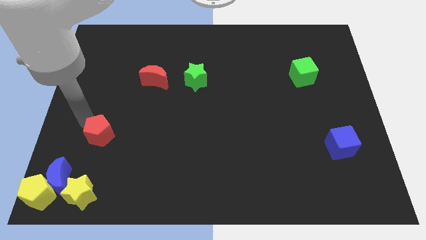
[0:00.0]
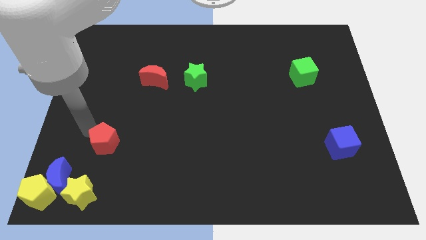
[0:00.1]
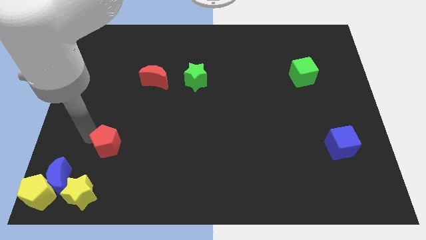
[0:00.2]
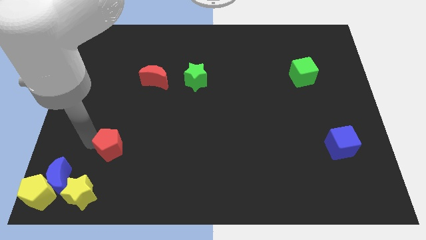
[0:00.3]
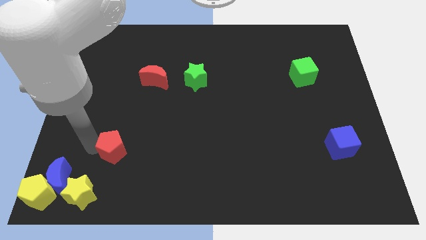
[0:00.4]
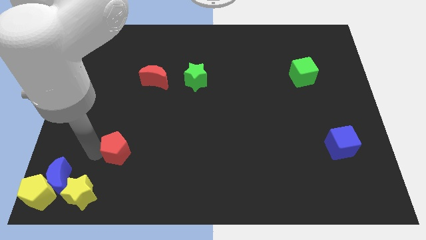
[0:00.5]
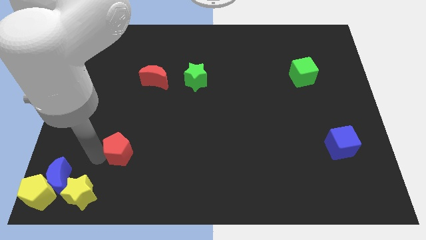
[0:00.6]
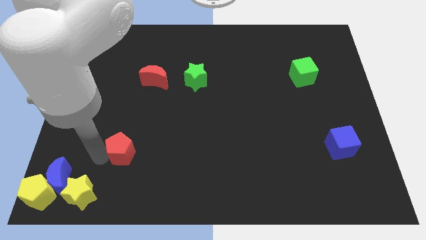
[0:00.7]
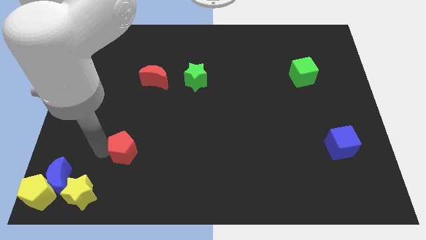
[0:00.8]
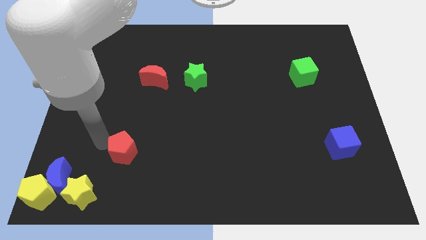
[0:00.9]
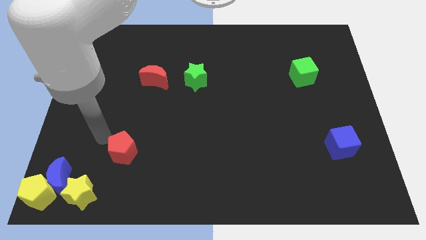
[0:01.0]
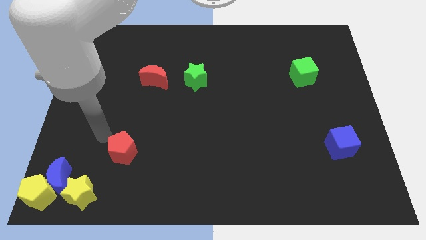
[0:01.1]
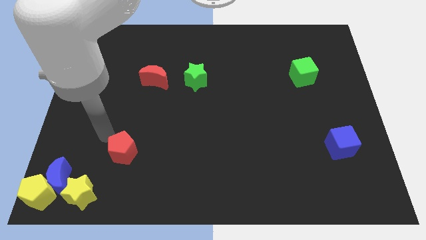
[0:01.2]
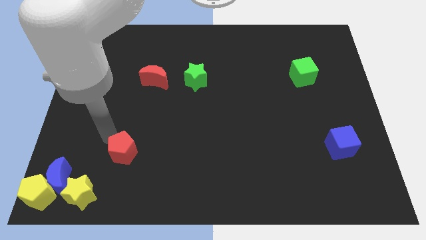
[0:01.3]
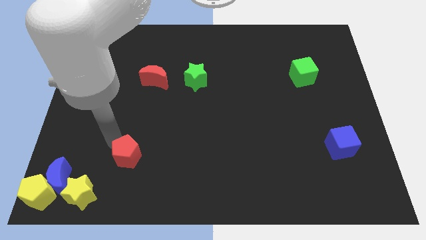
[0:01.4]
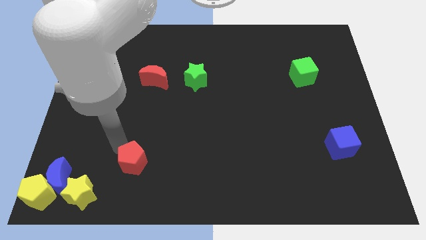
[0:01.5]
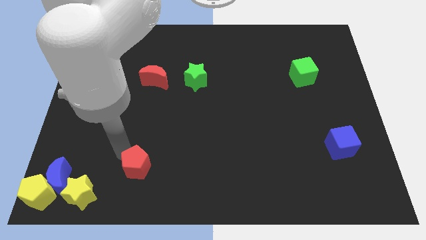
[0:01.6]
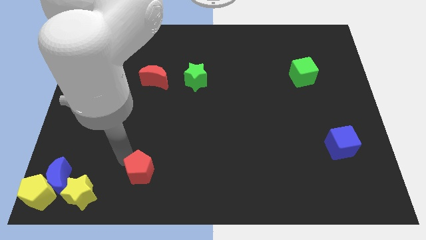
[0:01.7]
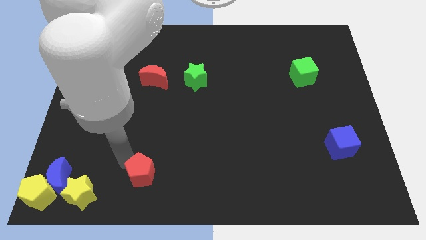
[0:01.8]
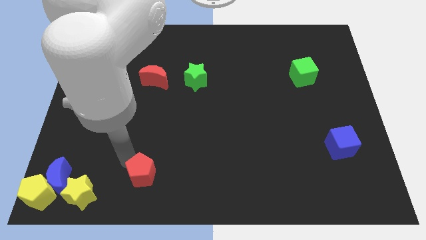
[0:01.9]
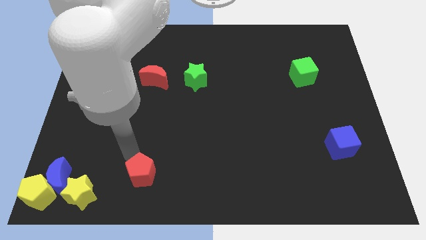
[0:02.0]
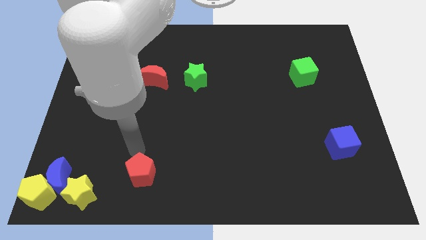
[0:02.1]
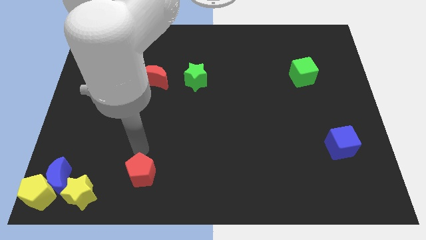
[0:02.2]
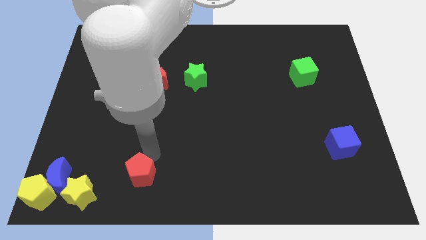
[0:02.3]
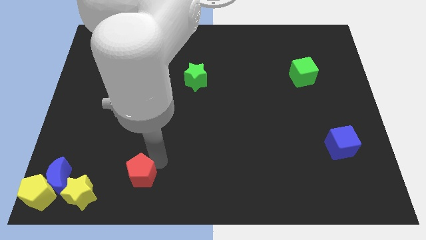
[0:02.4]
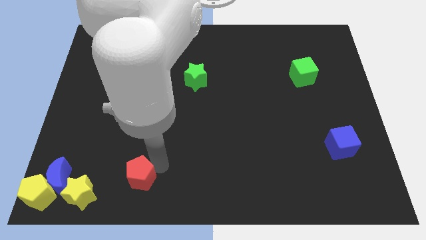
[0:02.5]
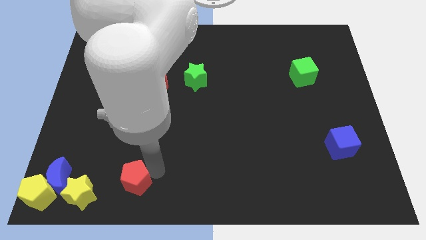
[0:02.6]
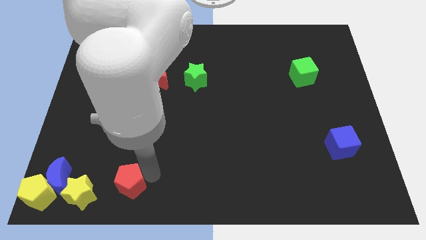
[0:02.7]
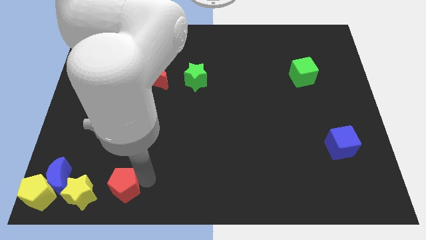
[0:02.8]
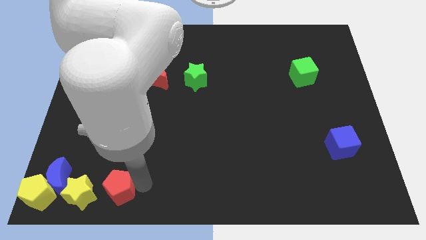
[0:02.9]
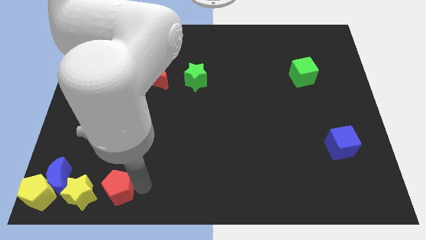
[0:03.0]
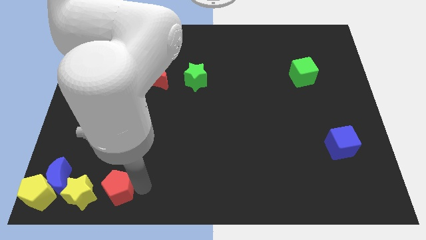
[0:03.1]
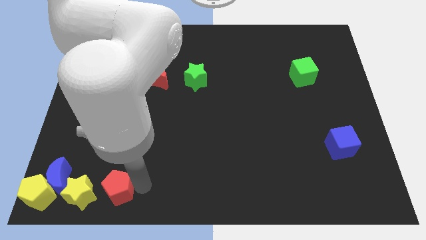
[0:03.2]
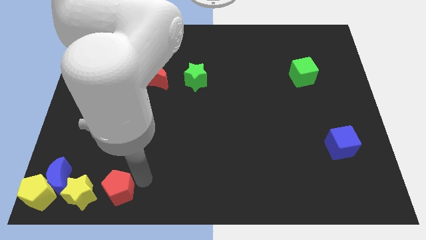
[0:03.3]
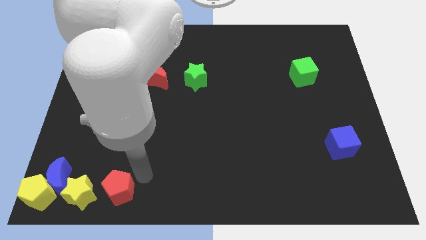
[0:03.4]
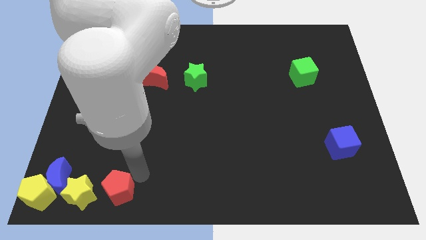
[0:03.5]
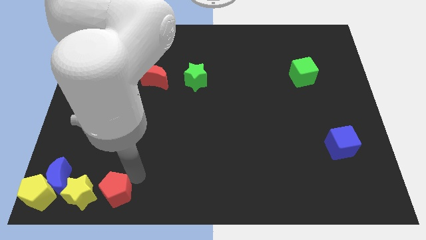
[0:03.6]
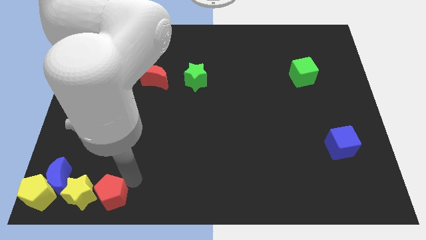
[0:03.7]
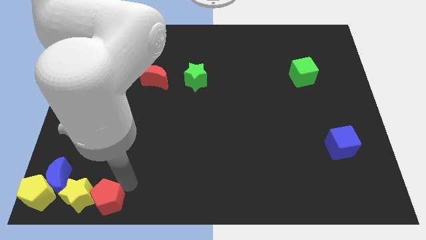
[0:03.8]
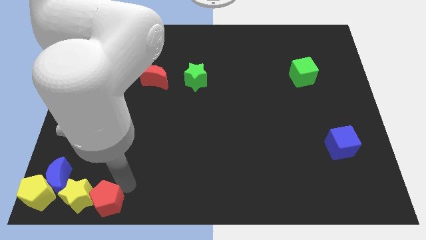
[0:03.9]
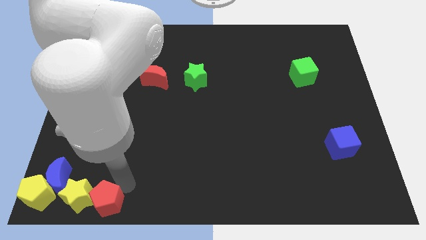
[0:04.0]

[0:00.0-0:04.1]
push the red pentagon into the right side of the yellow star

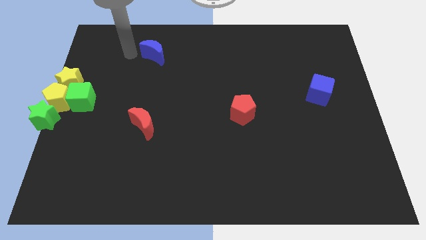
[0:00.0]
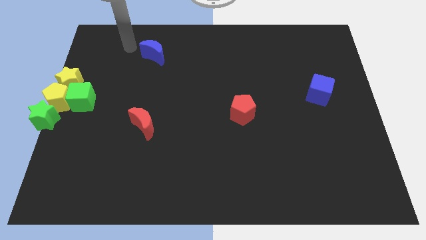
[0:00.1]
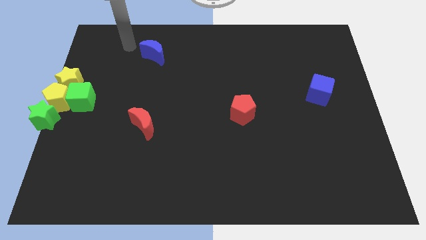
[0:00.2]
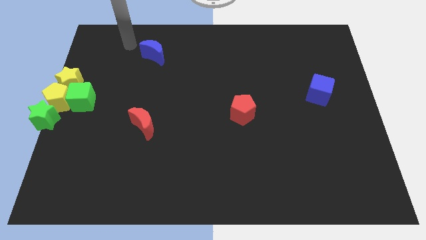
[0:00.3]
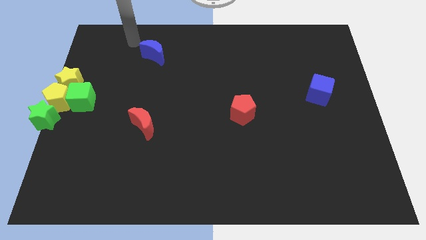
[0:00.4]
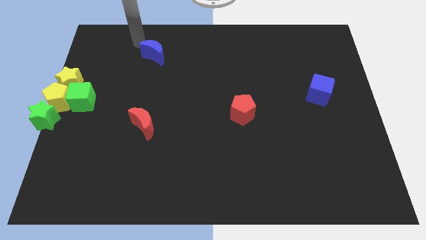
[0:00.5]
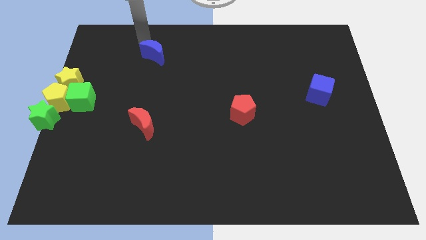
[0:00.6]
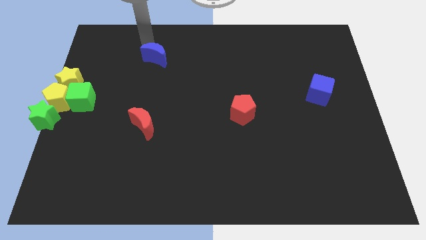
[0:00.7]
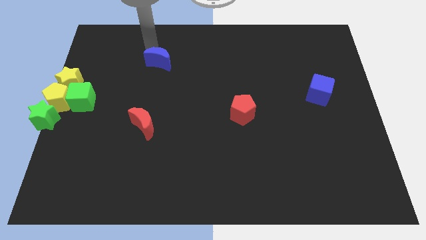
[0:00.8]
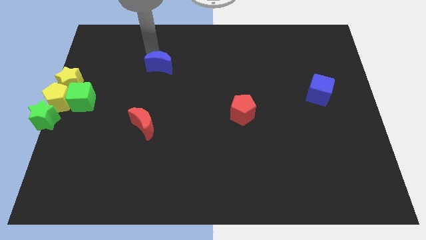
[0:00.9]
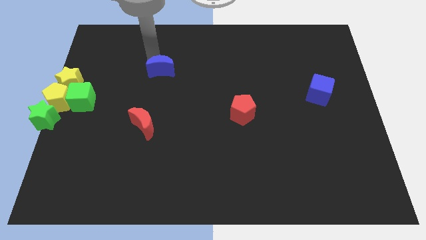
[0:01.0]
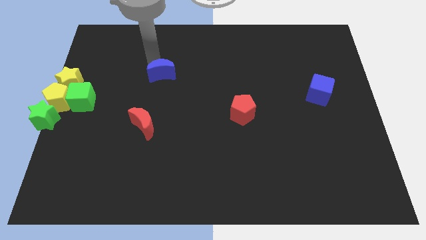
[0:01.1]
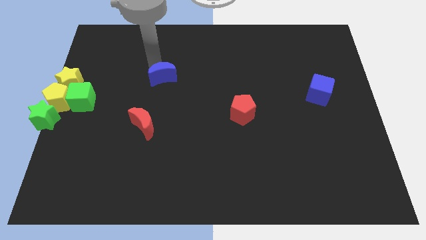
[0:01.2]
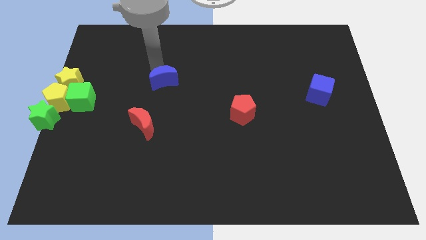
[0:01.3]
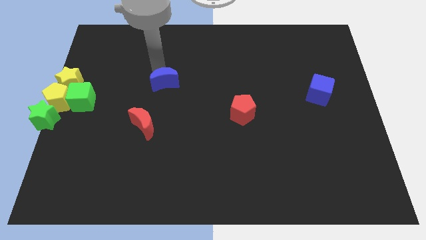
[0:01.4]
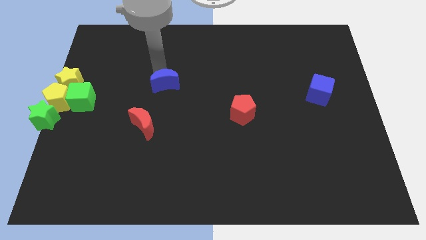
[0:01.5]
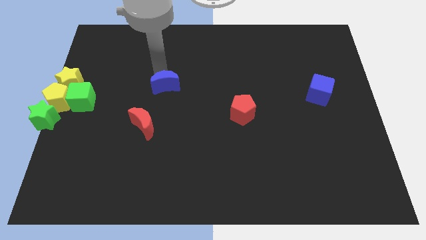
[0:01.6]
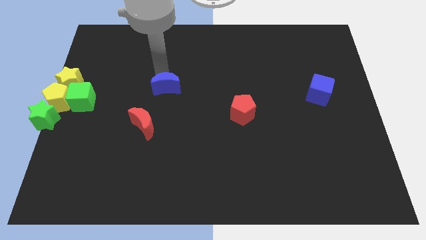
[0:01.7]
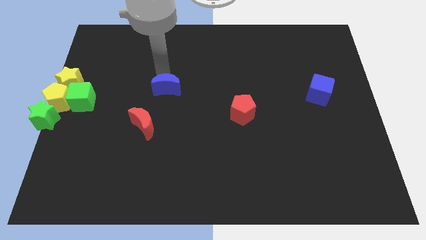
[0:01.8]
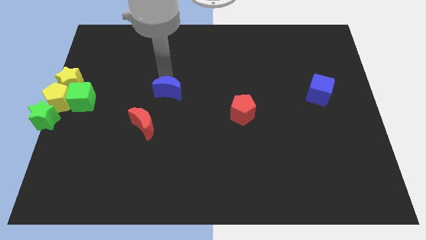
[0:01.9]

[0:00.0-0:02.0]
move the blue crescent slightly down

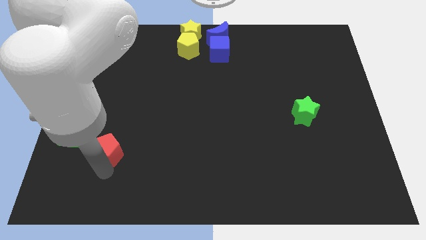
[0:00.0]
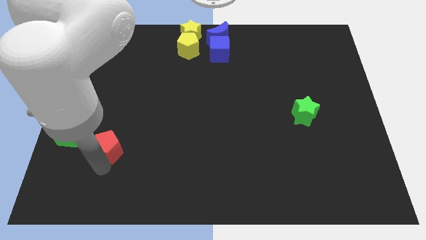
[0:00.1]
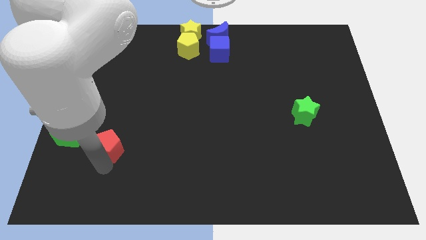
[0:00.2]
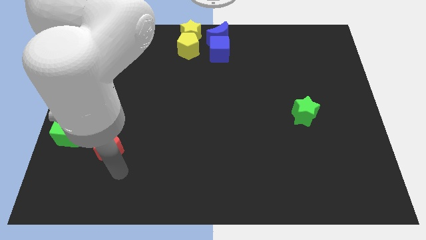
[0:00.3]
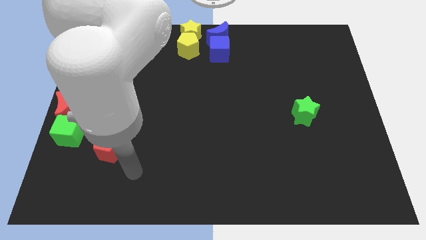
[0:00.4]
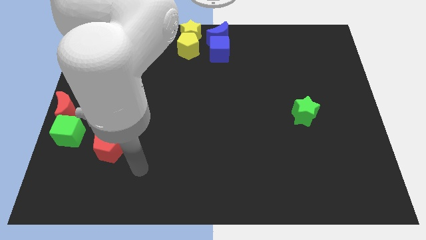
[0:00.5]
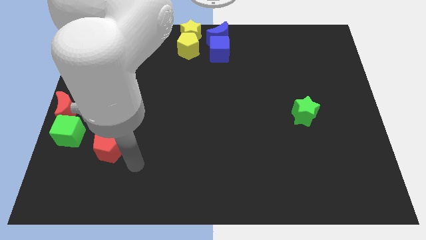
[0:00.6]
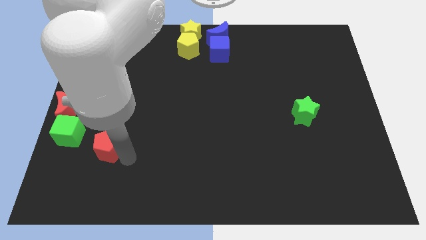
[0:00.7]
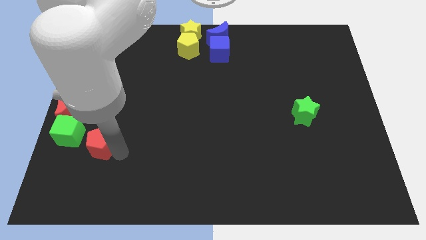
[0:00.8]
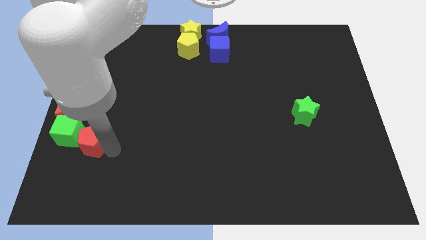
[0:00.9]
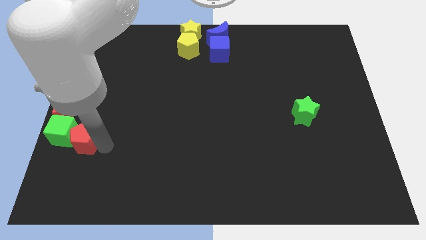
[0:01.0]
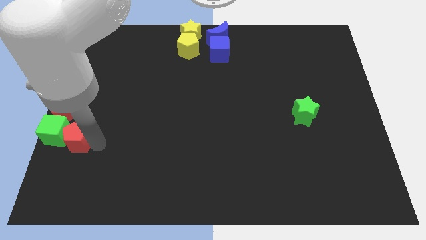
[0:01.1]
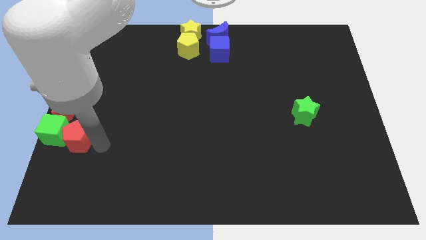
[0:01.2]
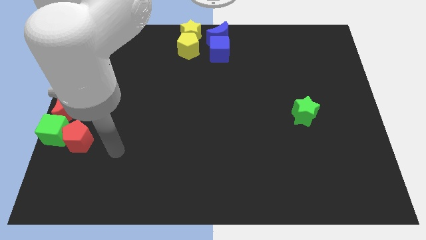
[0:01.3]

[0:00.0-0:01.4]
push the red pentagon into the green cube

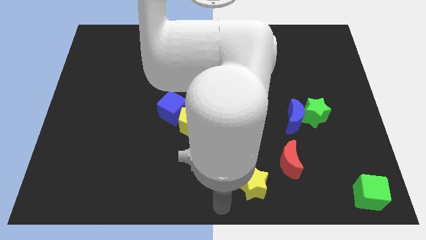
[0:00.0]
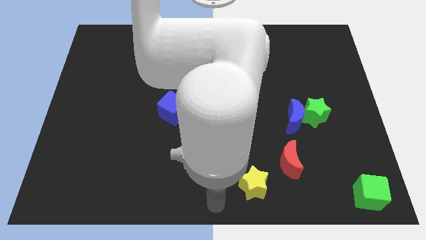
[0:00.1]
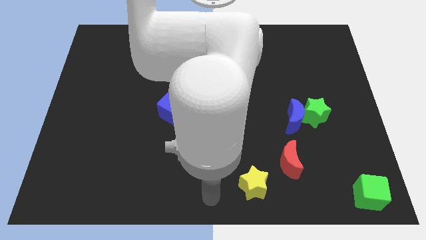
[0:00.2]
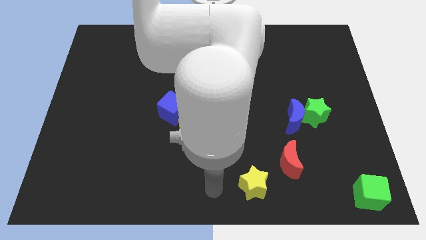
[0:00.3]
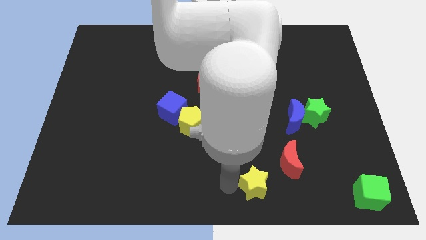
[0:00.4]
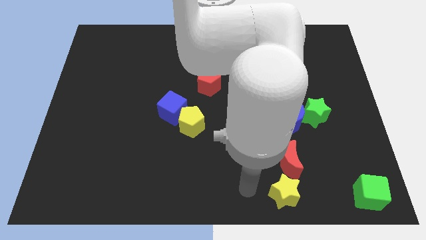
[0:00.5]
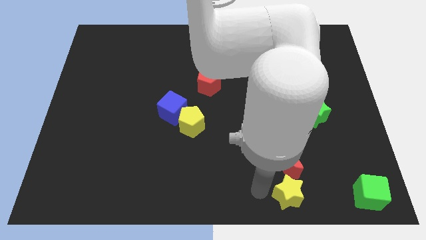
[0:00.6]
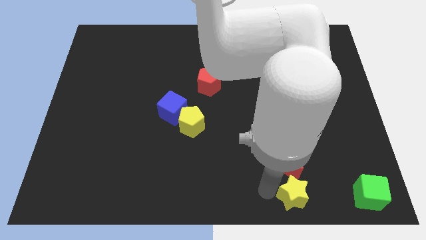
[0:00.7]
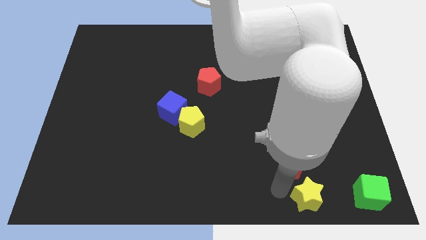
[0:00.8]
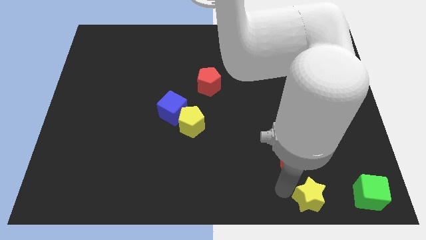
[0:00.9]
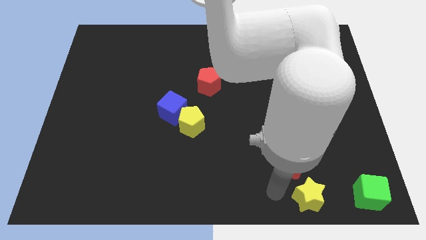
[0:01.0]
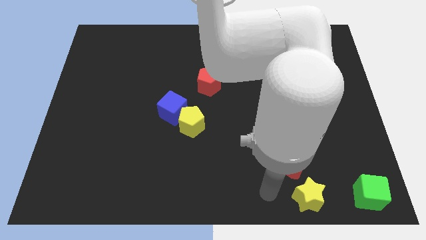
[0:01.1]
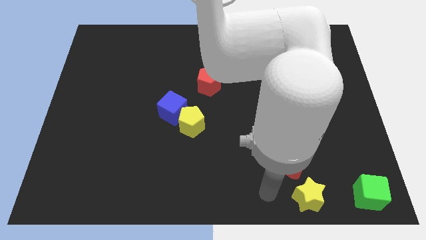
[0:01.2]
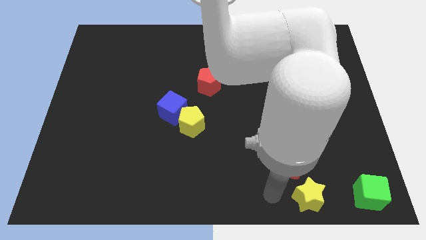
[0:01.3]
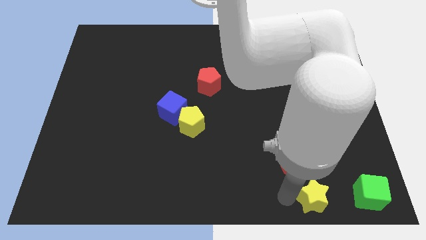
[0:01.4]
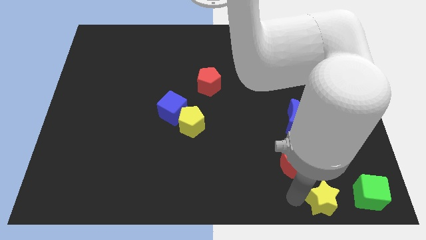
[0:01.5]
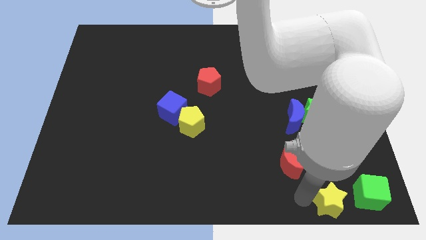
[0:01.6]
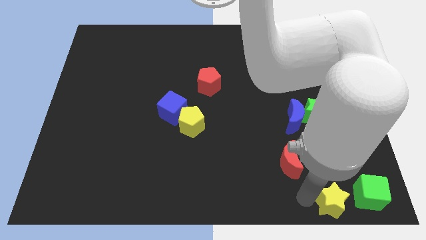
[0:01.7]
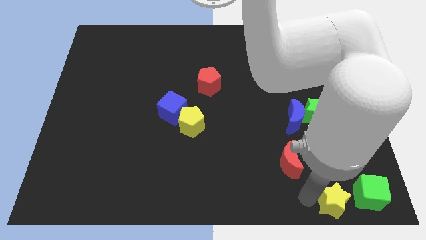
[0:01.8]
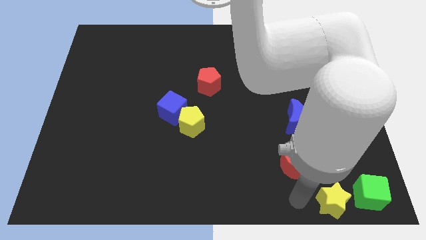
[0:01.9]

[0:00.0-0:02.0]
push the yellow star slightly towards the green cube
